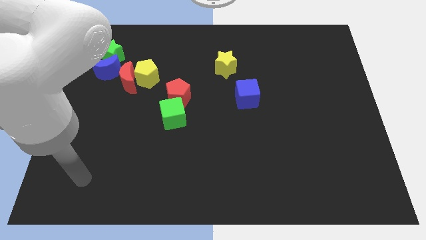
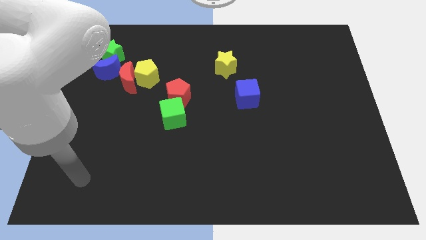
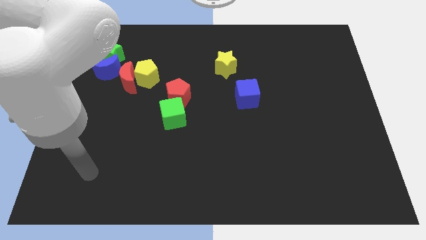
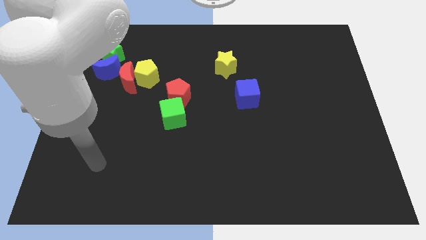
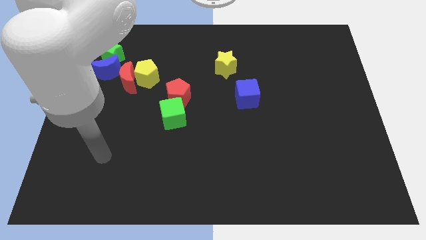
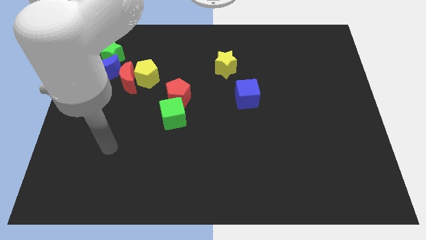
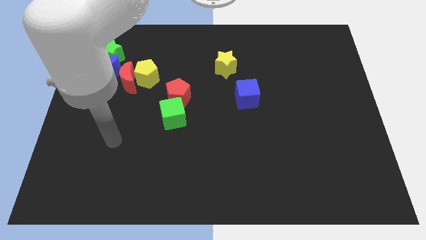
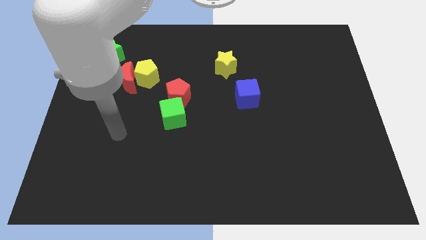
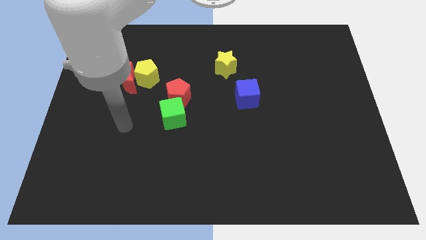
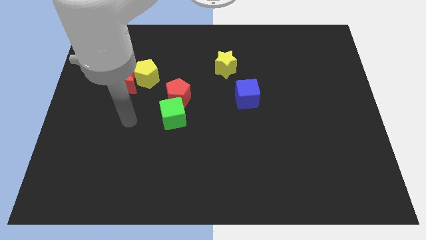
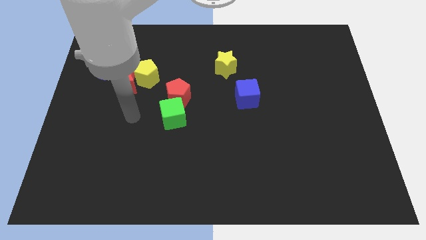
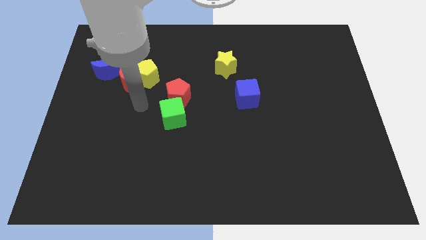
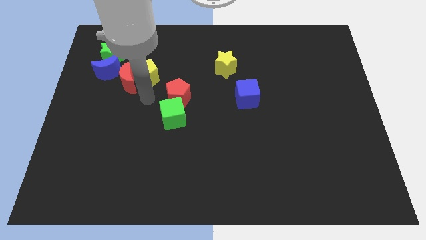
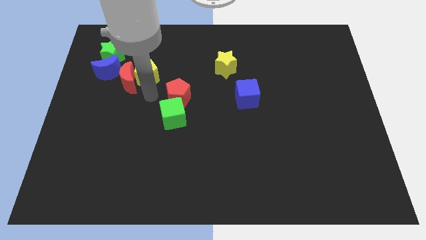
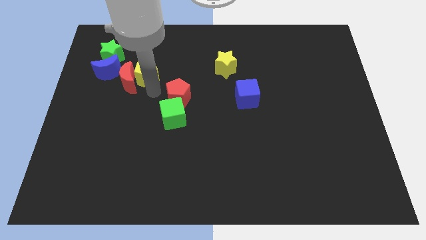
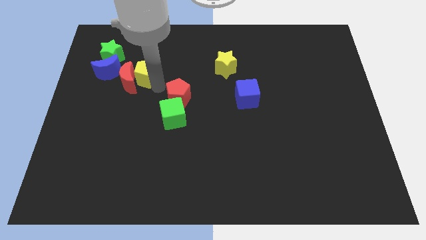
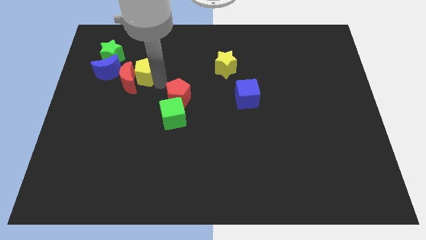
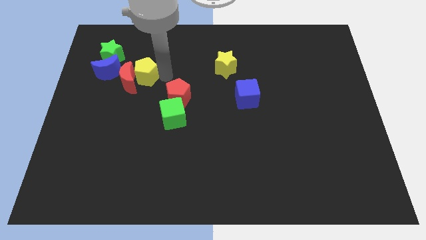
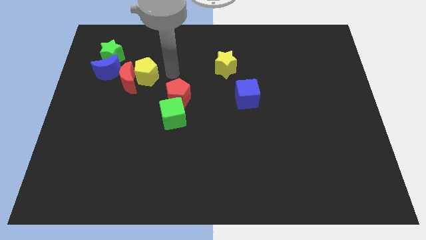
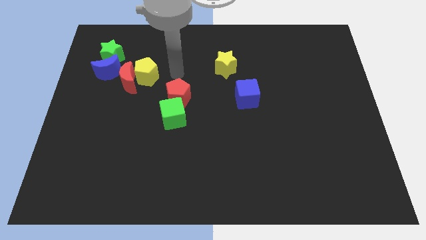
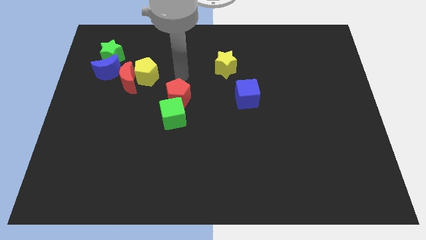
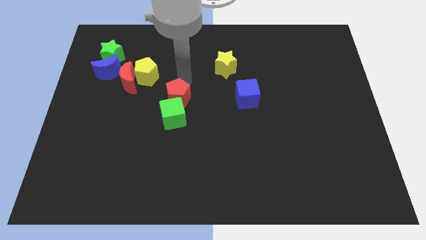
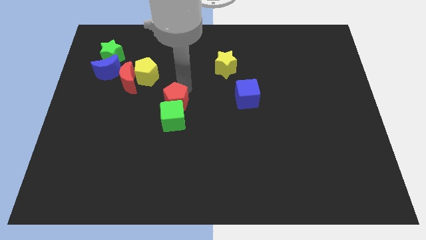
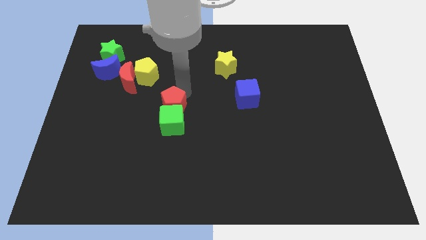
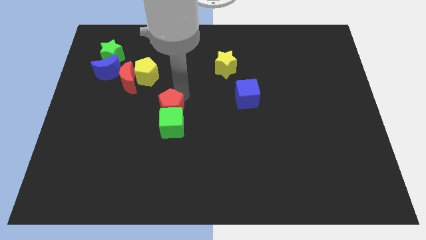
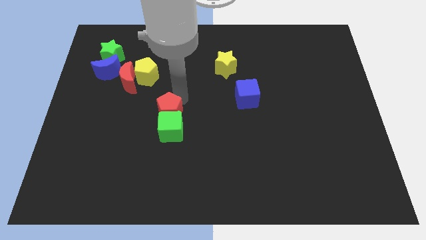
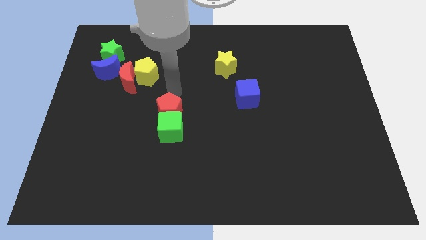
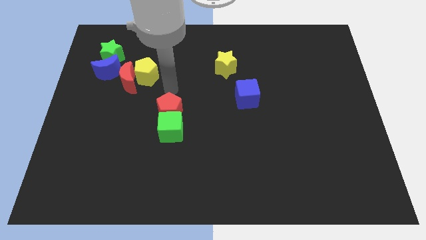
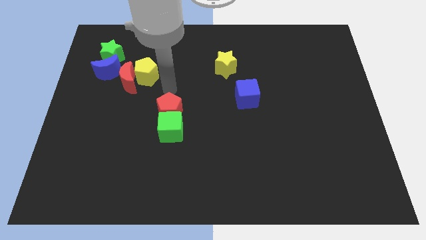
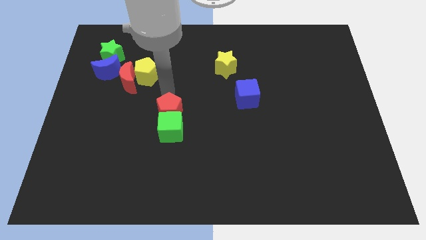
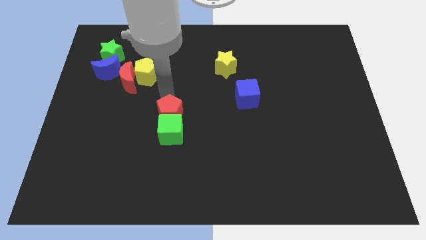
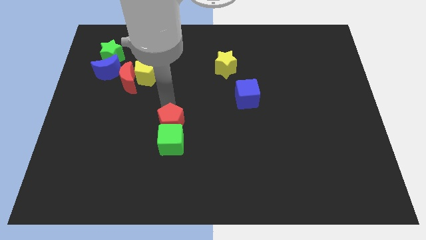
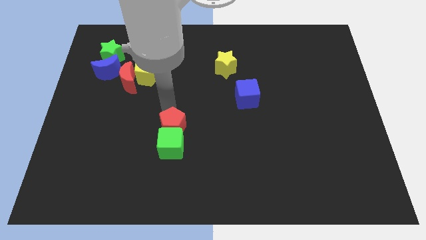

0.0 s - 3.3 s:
adjust the red pentagon vertically above the green cube

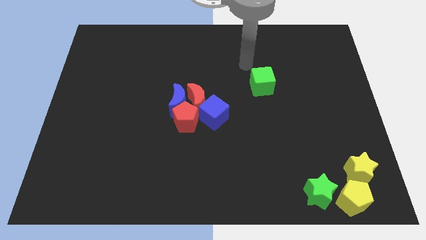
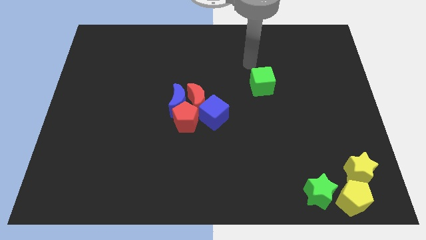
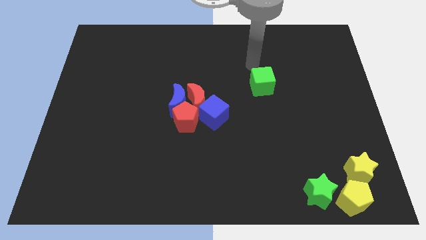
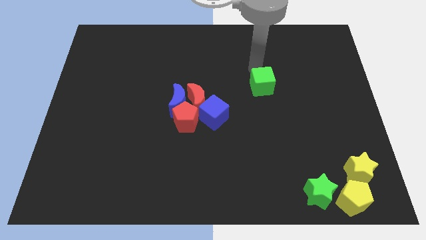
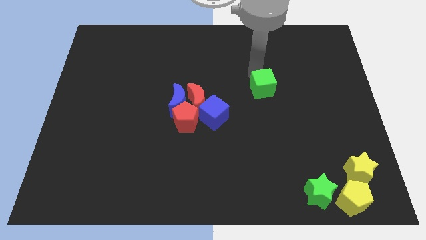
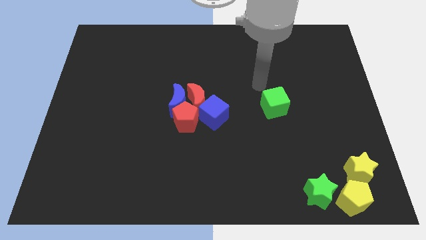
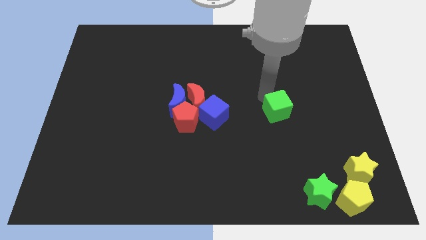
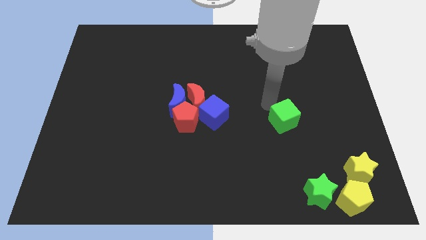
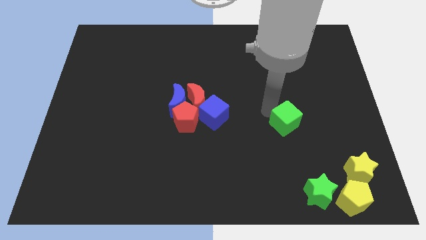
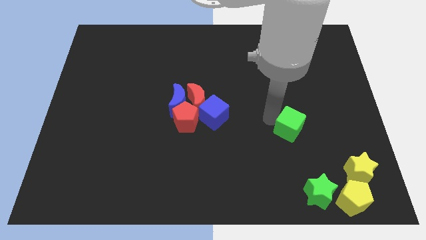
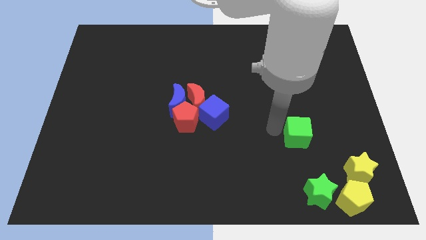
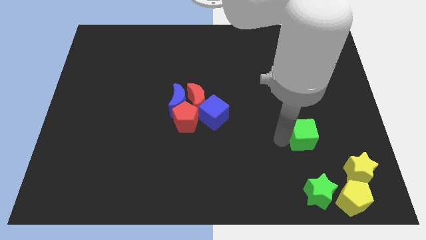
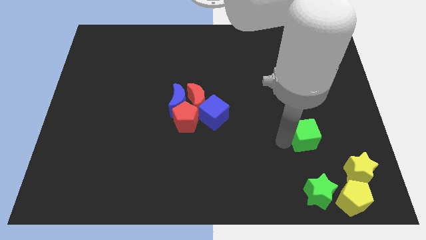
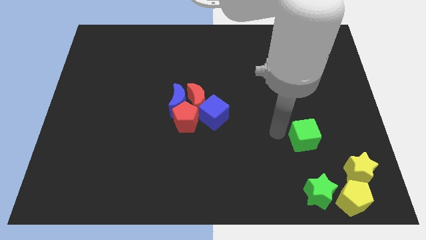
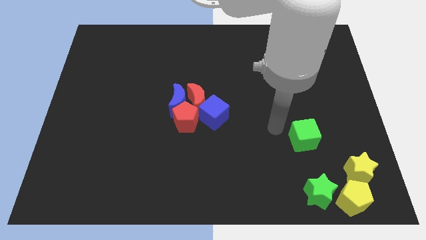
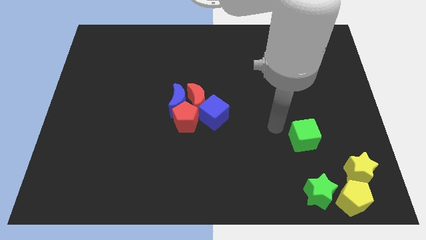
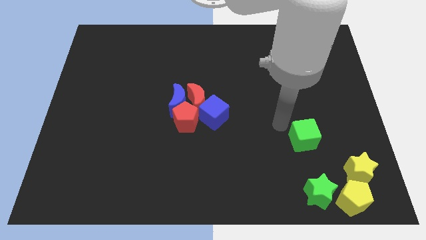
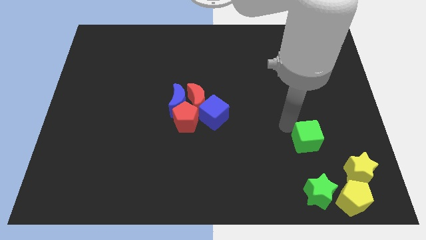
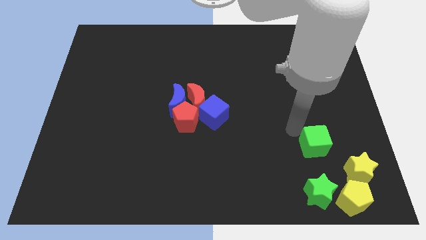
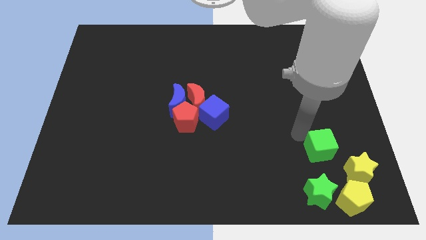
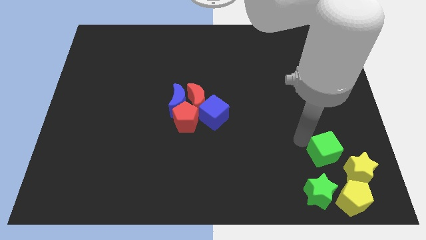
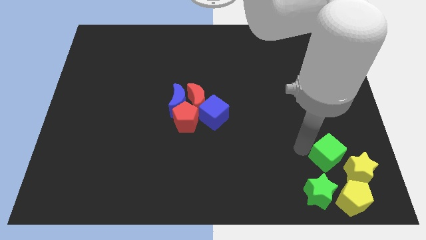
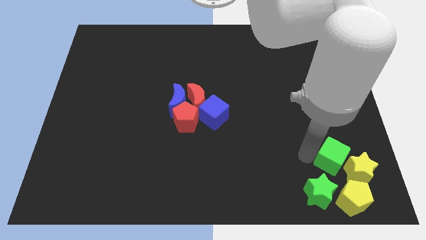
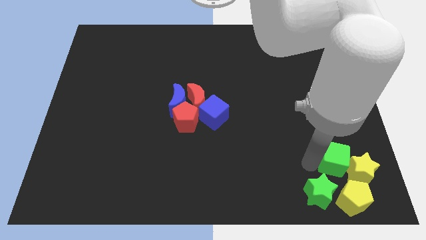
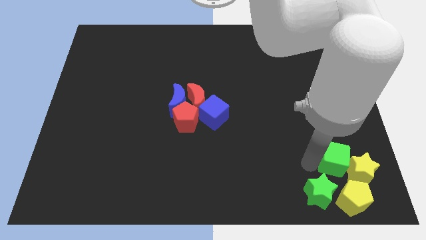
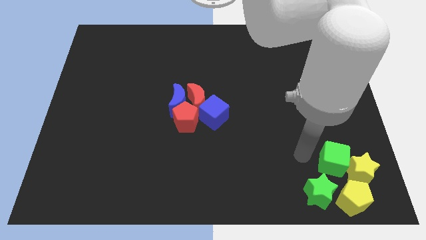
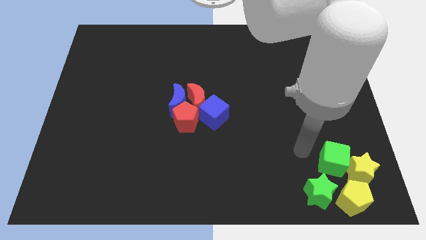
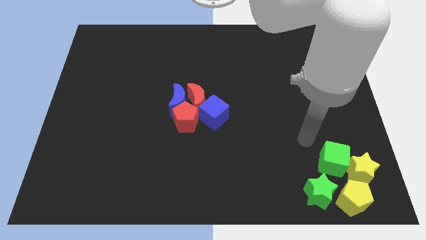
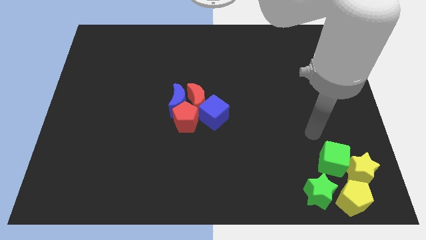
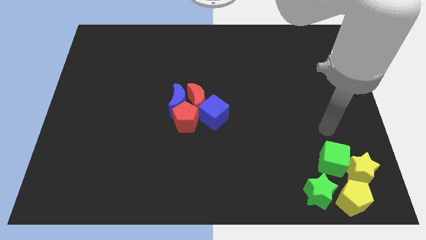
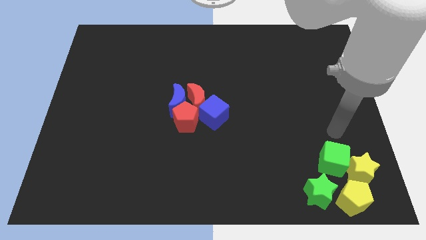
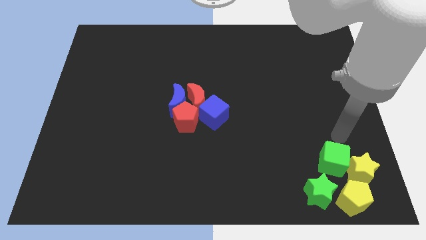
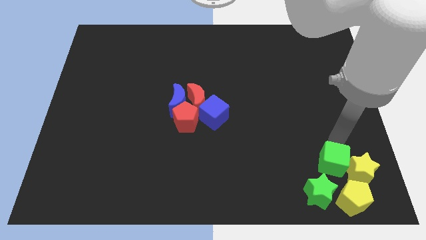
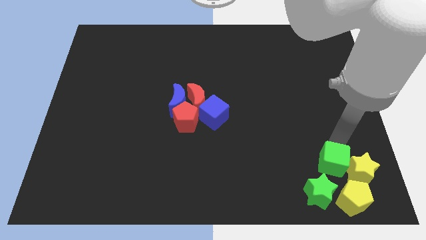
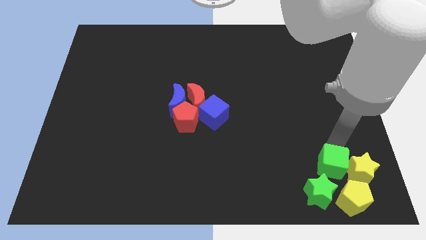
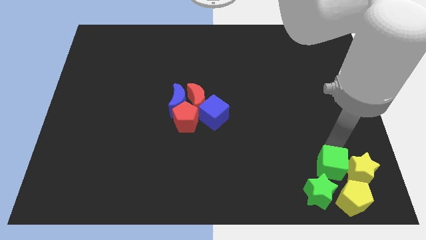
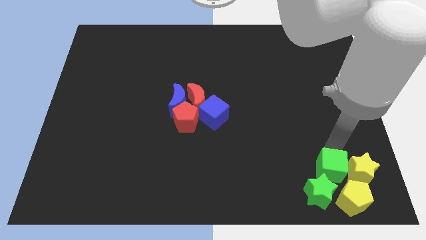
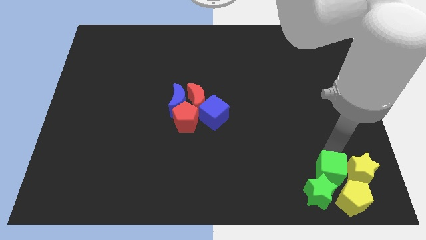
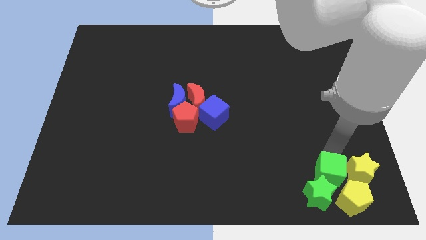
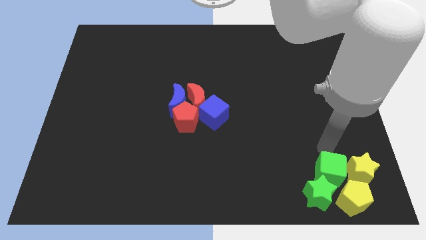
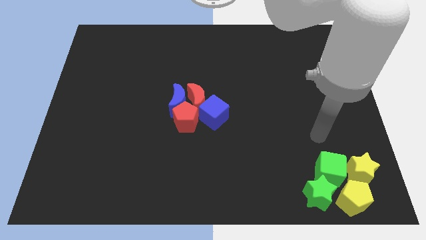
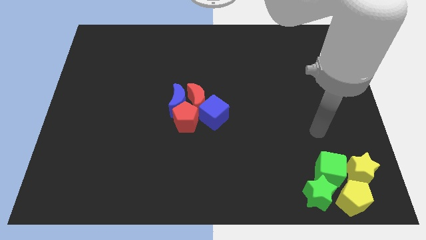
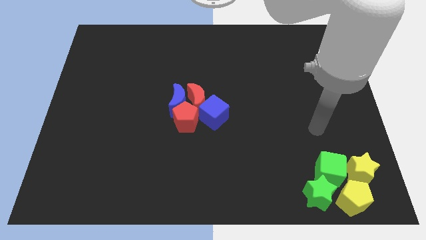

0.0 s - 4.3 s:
move the green cube to the left of the yellow star

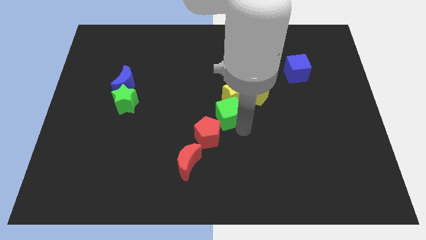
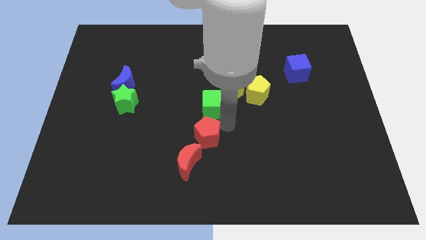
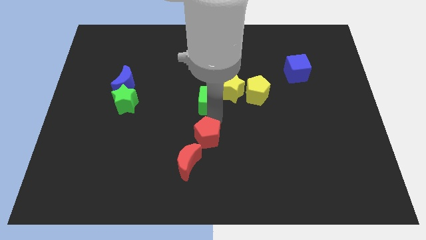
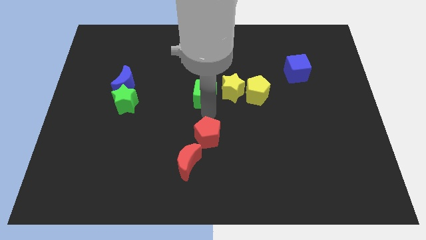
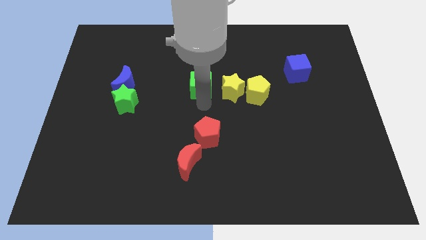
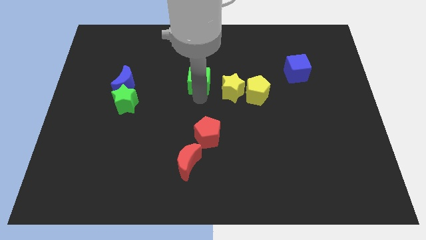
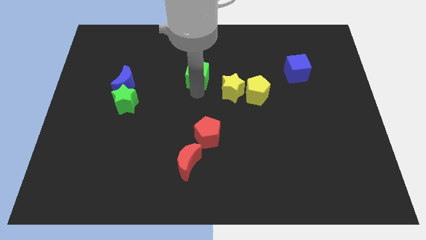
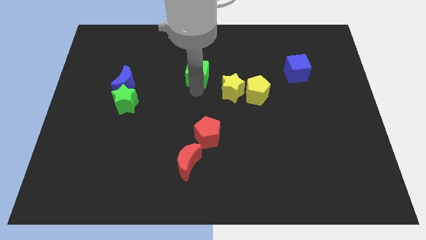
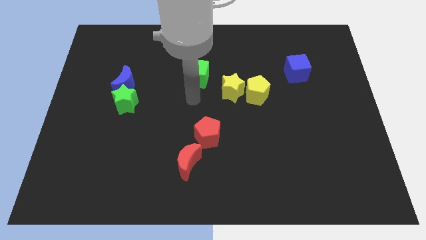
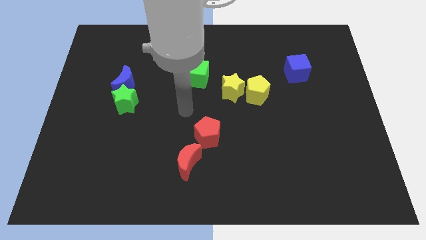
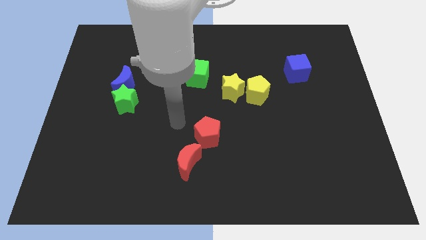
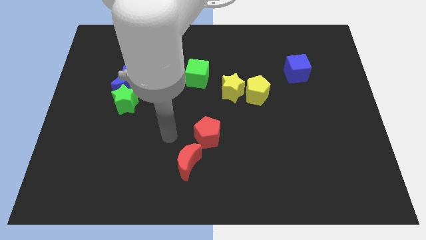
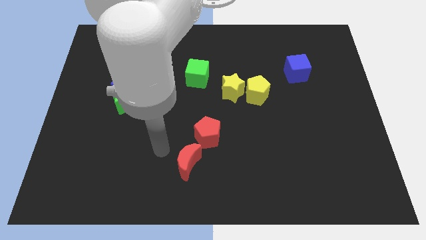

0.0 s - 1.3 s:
separate the green cube from yellow star

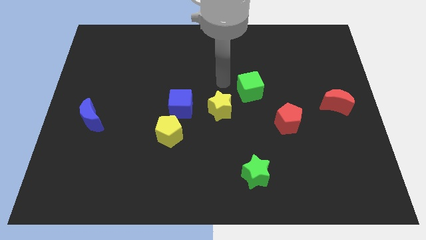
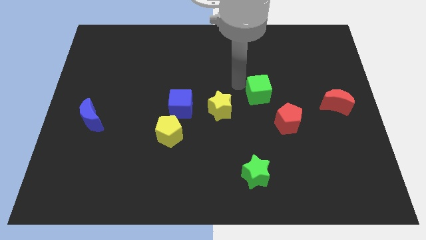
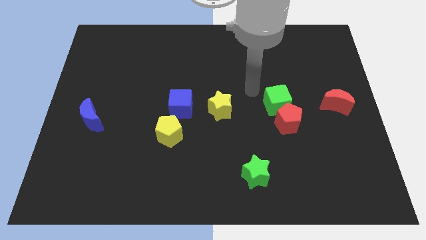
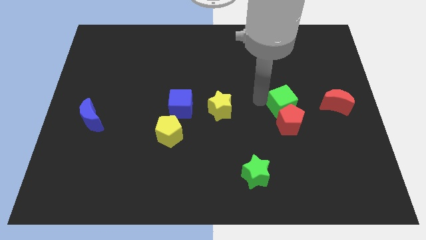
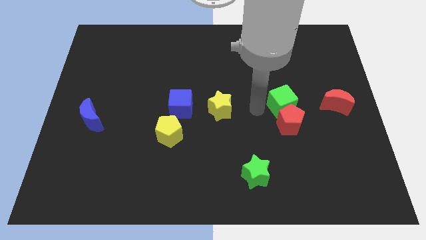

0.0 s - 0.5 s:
push the green cube into red pentagon
